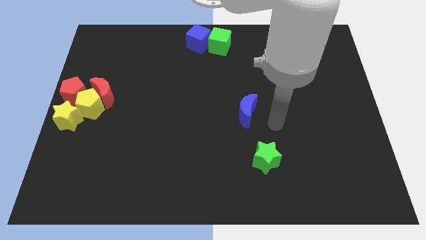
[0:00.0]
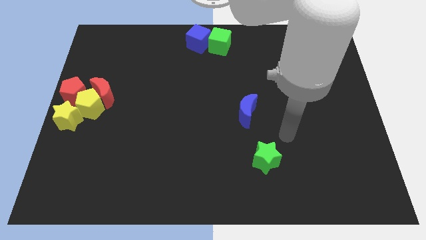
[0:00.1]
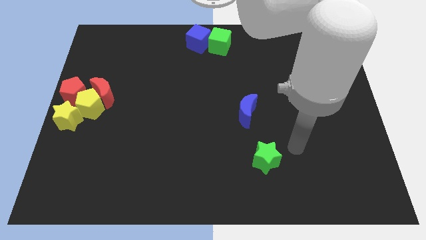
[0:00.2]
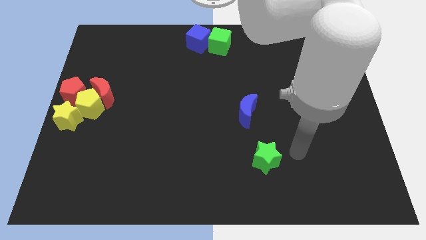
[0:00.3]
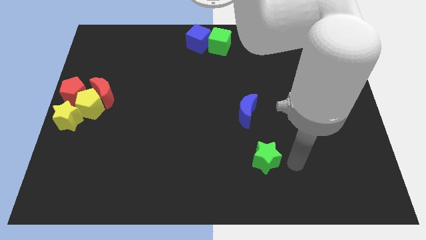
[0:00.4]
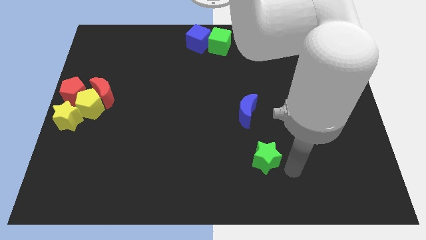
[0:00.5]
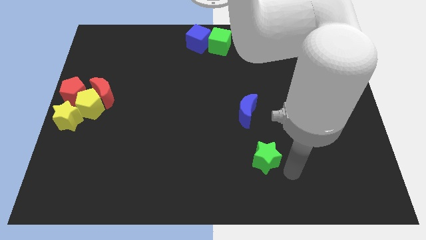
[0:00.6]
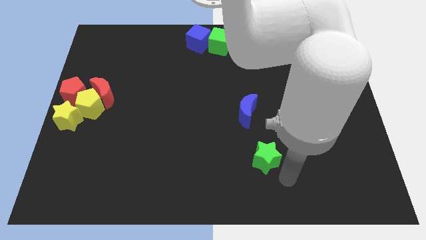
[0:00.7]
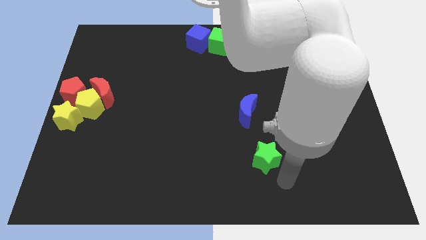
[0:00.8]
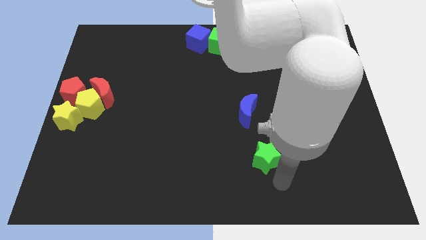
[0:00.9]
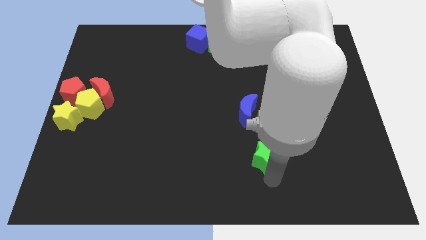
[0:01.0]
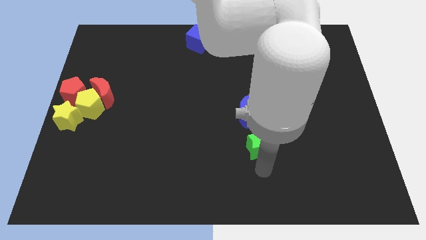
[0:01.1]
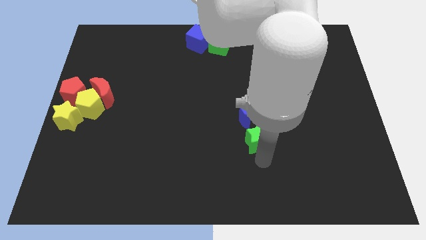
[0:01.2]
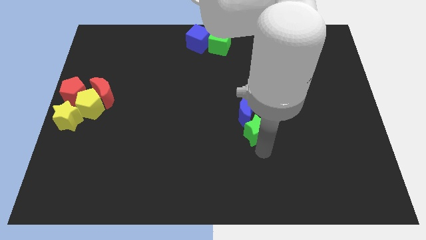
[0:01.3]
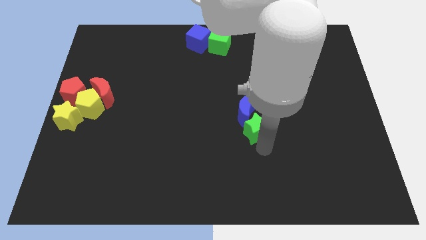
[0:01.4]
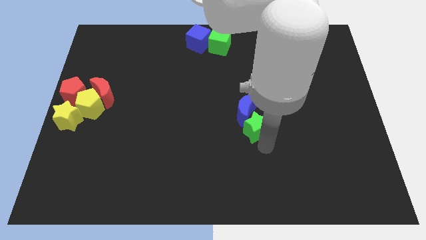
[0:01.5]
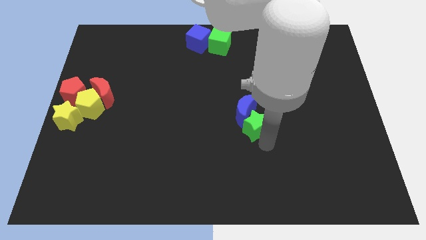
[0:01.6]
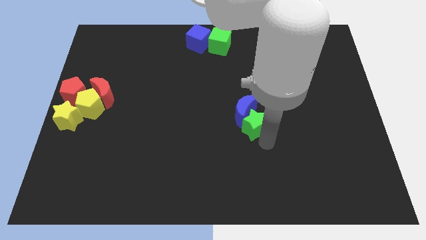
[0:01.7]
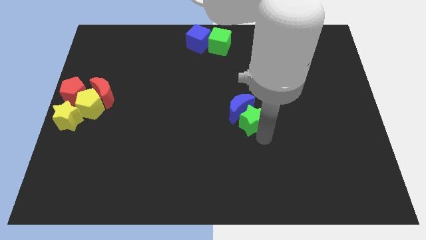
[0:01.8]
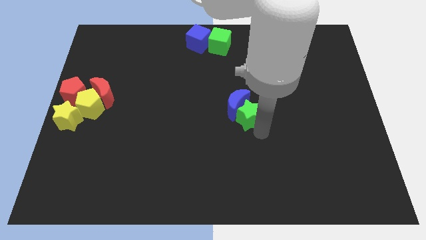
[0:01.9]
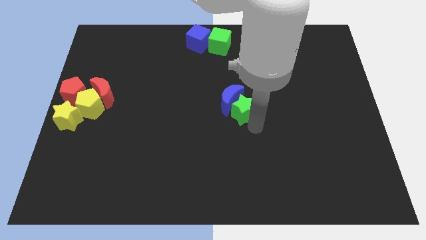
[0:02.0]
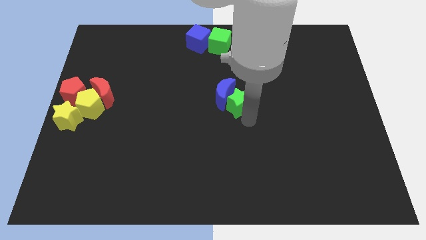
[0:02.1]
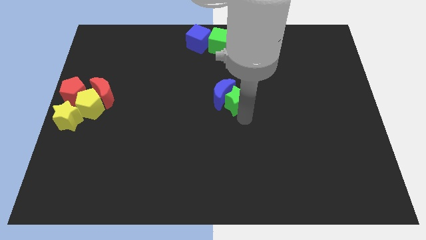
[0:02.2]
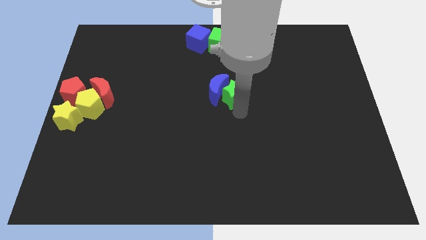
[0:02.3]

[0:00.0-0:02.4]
push the green star into the blue crescent

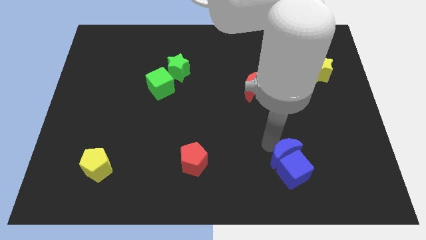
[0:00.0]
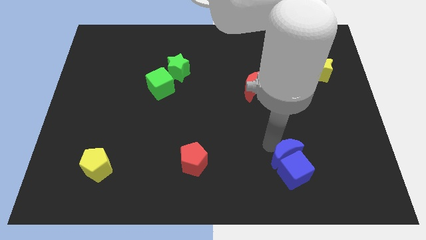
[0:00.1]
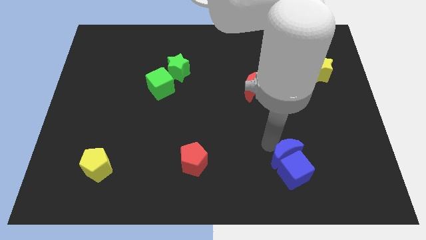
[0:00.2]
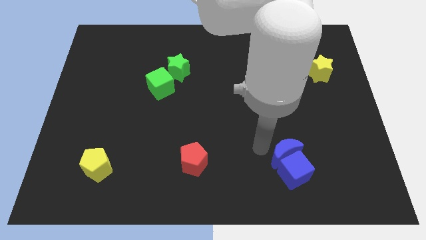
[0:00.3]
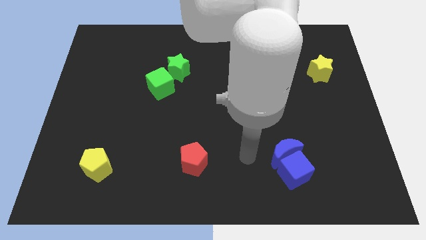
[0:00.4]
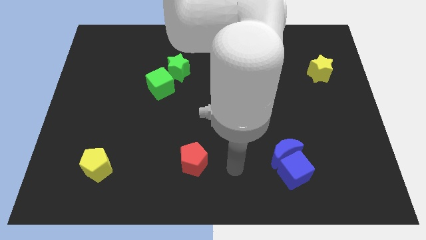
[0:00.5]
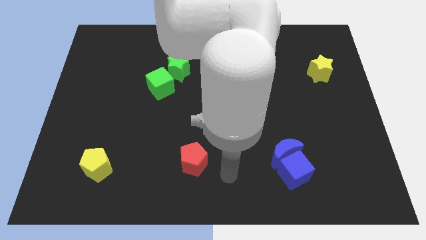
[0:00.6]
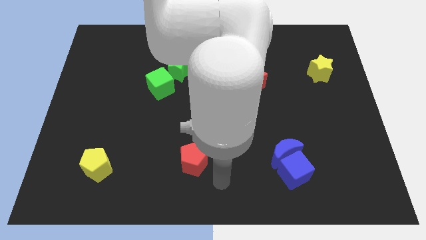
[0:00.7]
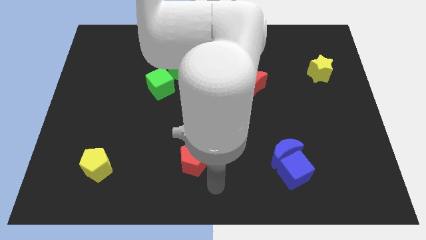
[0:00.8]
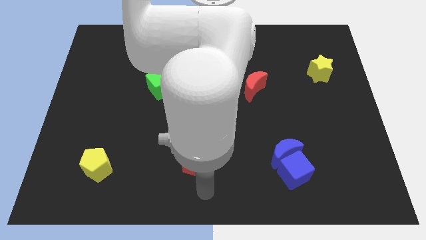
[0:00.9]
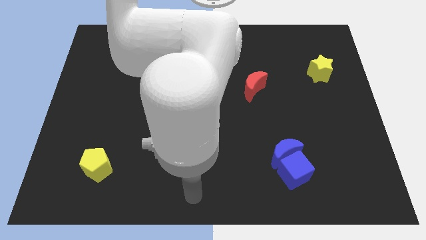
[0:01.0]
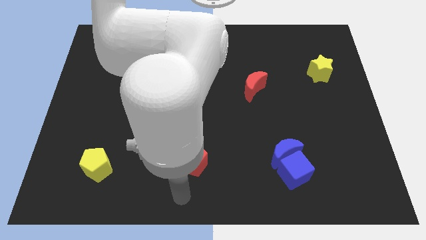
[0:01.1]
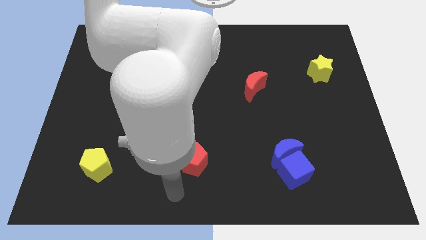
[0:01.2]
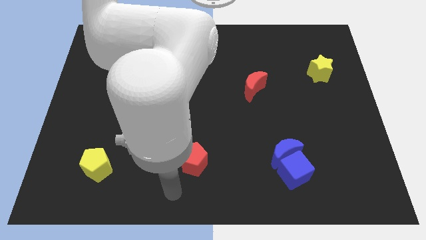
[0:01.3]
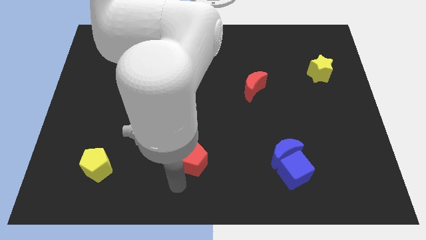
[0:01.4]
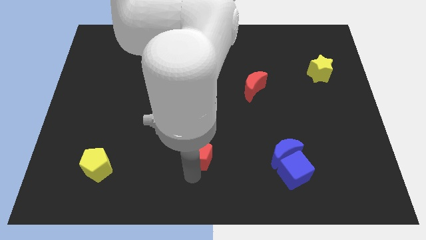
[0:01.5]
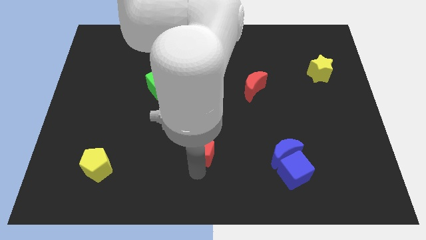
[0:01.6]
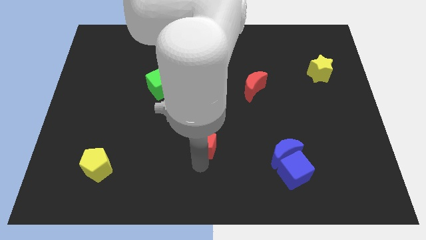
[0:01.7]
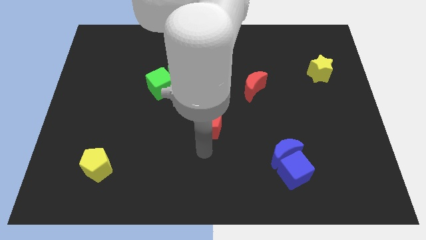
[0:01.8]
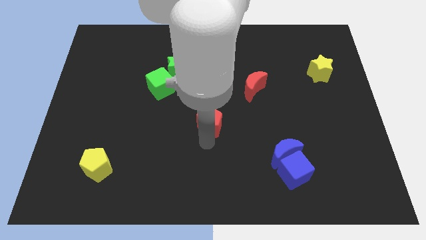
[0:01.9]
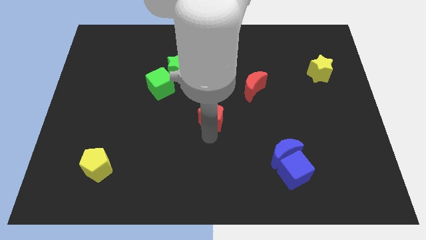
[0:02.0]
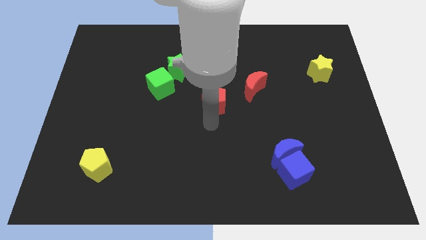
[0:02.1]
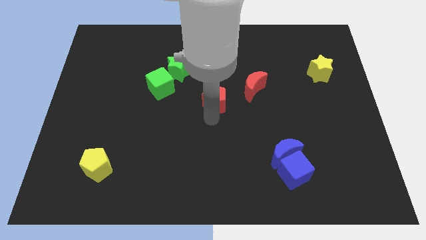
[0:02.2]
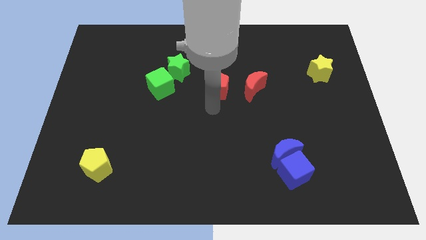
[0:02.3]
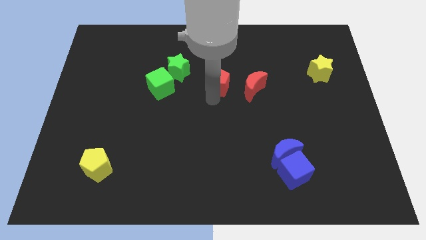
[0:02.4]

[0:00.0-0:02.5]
place red pentagon to the left of red moon

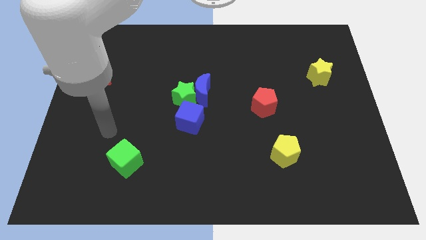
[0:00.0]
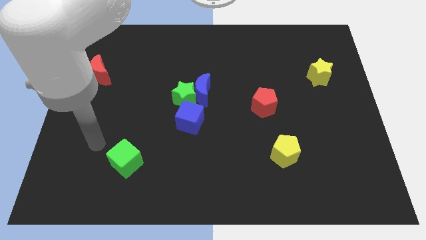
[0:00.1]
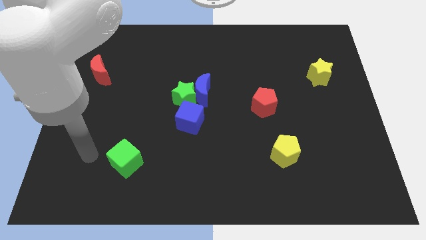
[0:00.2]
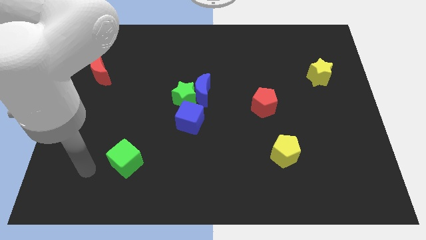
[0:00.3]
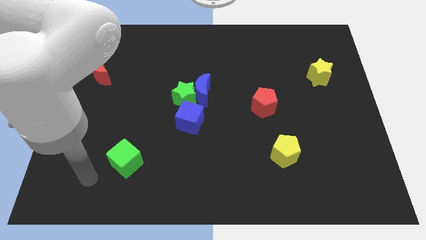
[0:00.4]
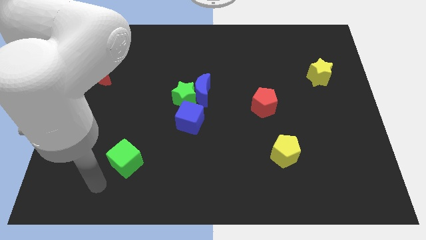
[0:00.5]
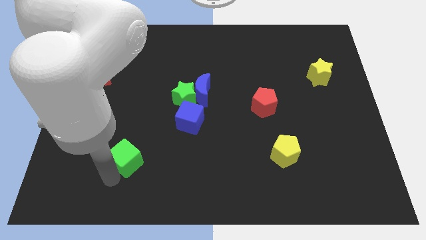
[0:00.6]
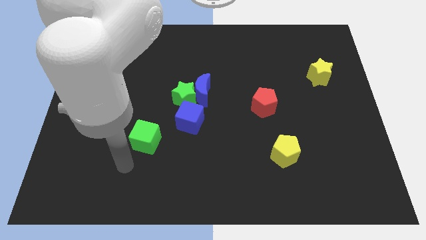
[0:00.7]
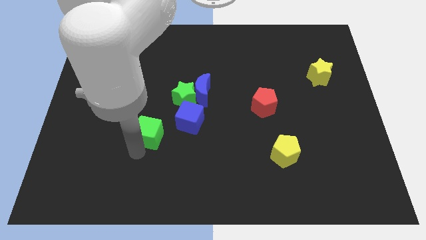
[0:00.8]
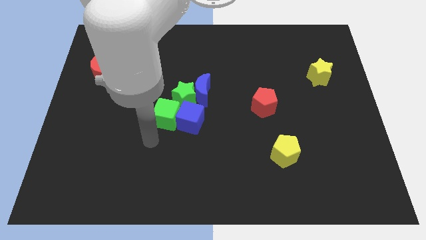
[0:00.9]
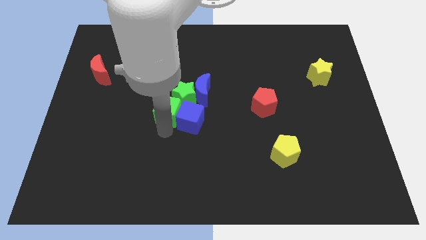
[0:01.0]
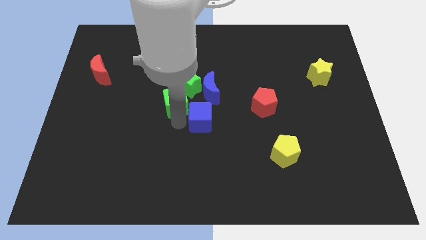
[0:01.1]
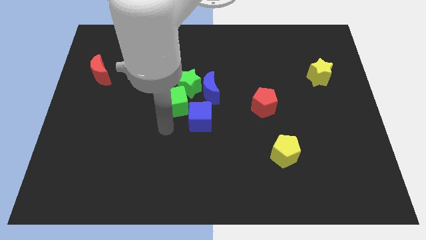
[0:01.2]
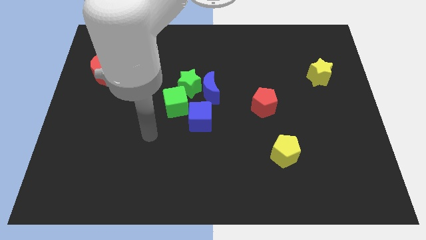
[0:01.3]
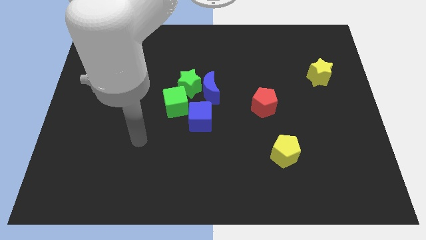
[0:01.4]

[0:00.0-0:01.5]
move green cube left below the green star

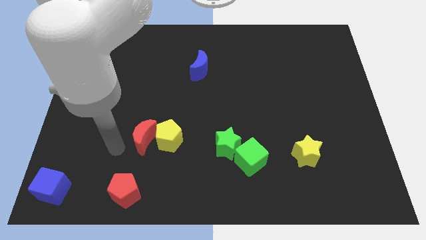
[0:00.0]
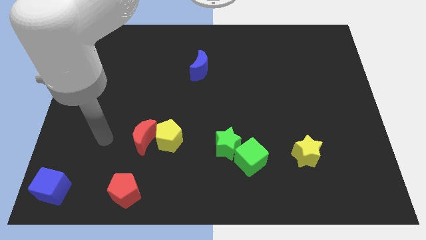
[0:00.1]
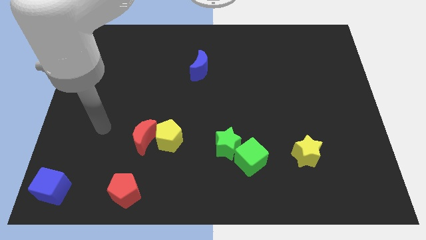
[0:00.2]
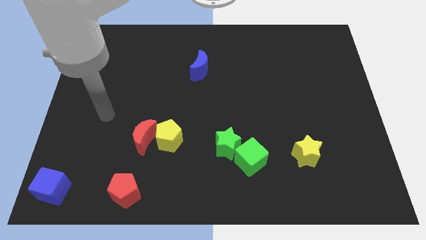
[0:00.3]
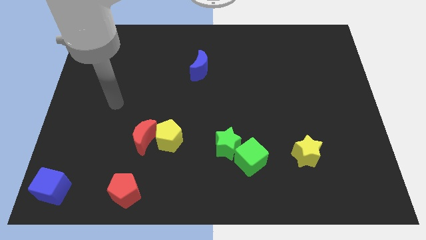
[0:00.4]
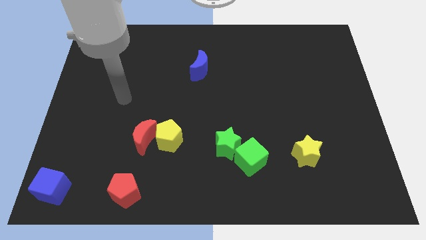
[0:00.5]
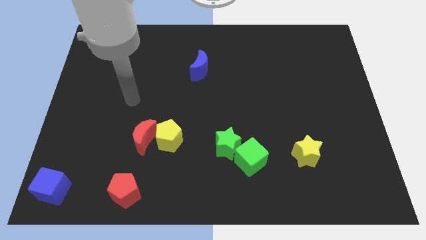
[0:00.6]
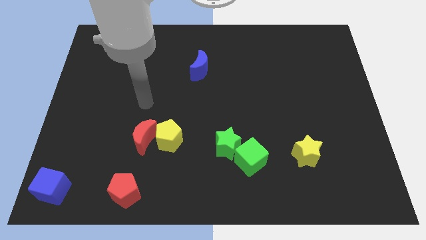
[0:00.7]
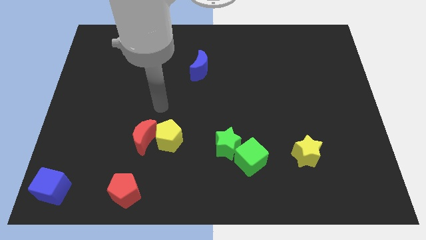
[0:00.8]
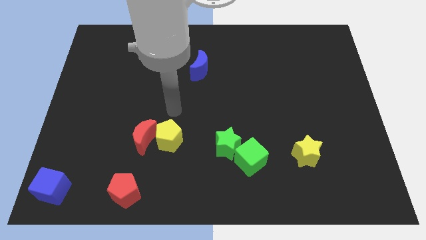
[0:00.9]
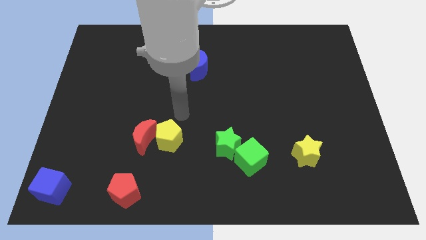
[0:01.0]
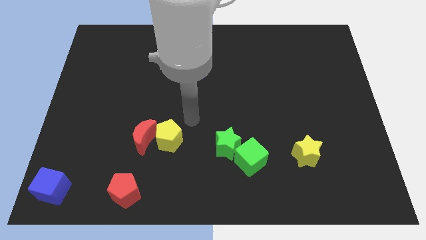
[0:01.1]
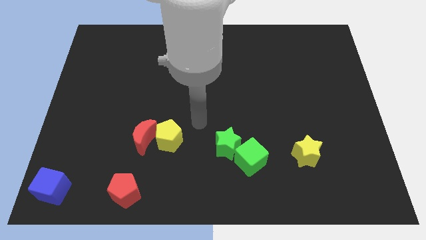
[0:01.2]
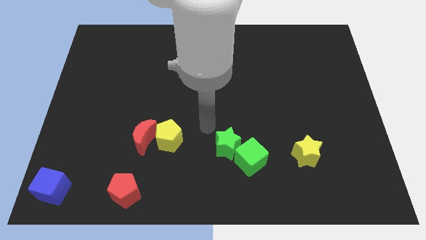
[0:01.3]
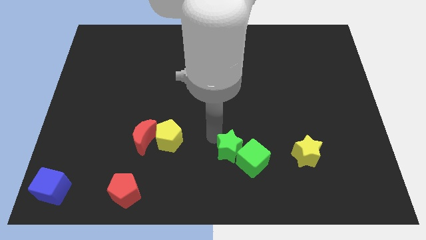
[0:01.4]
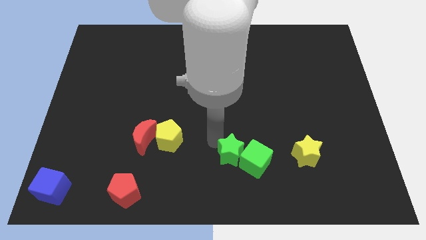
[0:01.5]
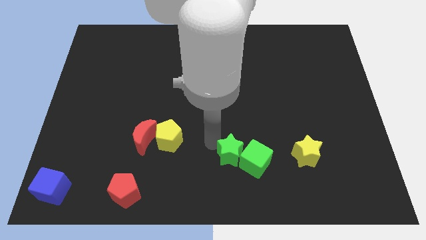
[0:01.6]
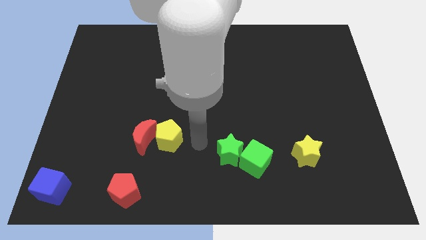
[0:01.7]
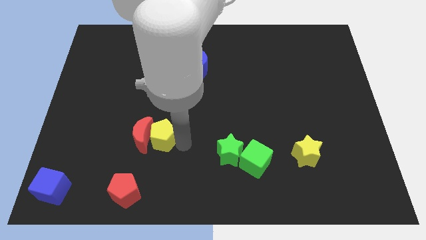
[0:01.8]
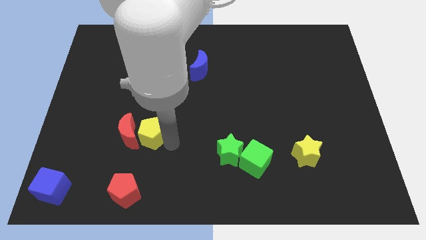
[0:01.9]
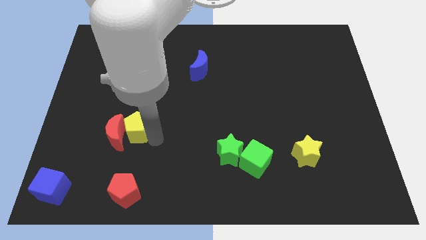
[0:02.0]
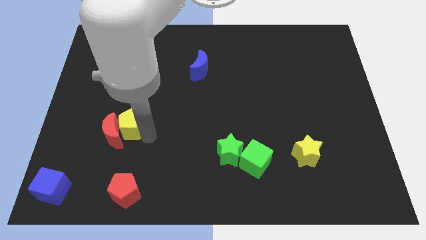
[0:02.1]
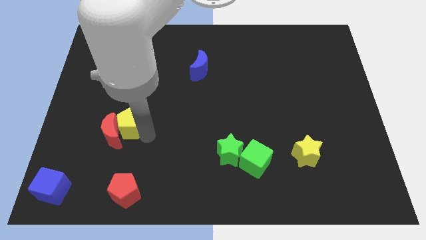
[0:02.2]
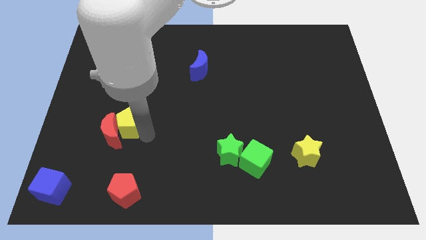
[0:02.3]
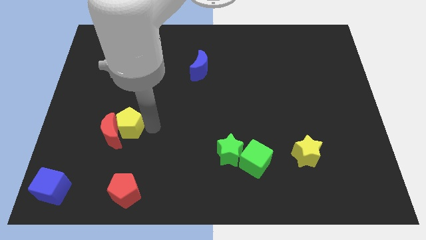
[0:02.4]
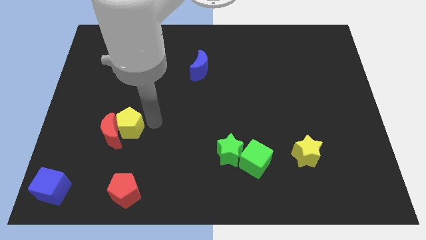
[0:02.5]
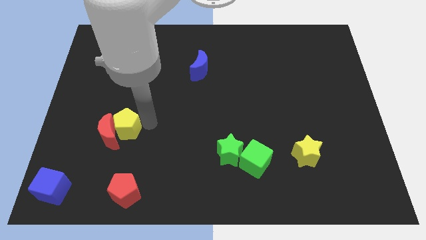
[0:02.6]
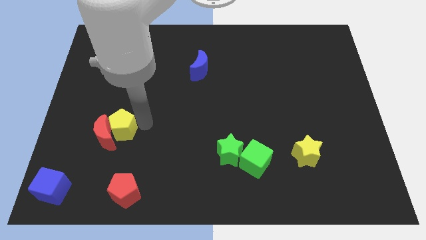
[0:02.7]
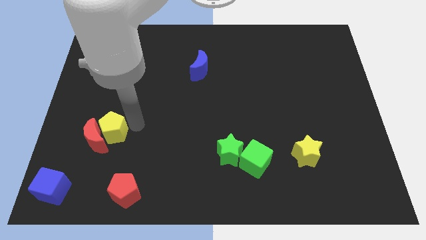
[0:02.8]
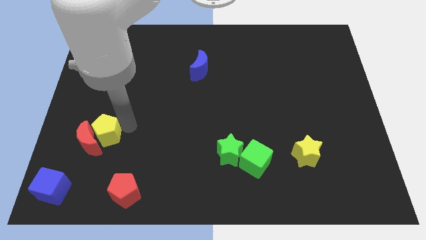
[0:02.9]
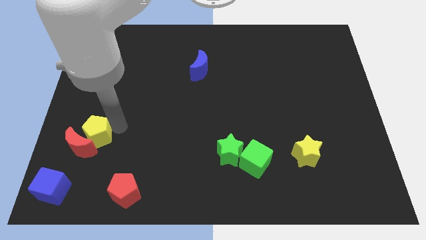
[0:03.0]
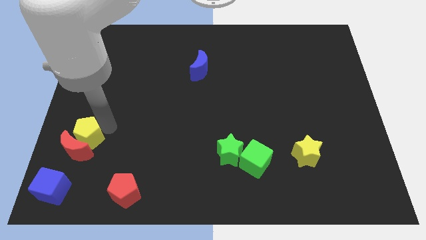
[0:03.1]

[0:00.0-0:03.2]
move yellow pentagon along with red crescent to left side of the board
